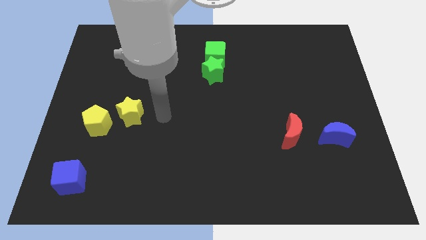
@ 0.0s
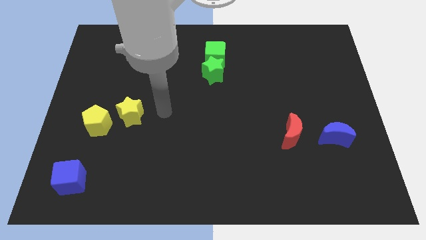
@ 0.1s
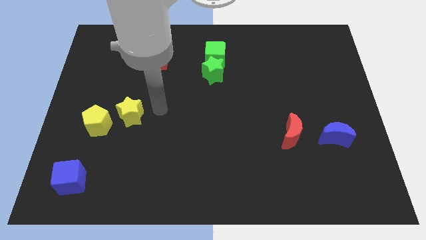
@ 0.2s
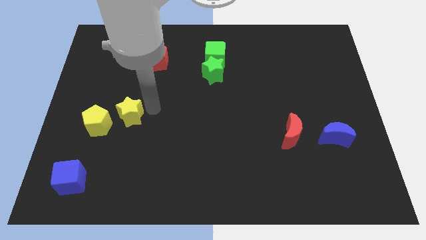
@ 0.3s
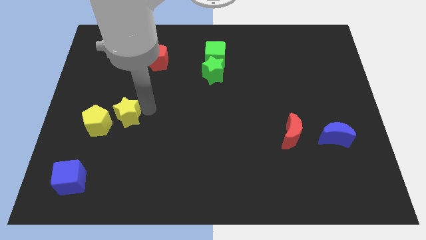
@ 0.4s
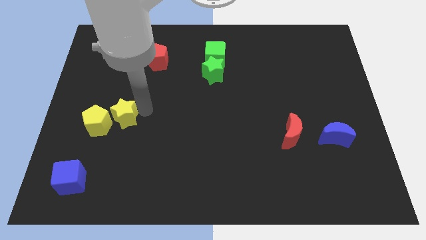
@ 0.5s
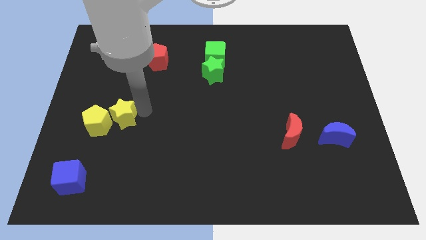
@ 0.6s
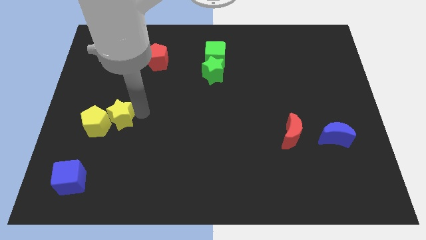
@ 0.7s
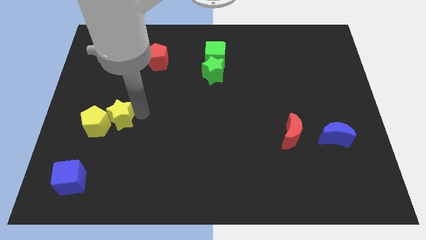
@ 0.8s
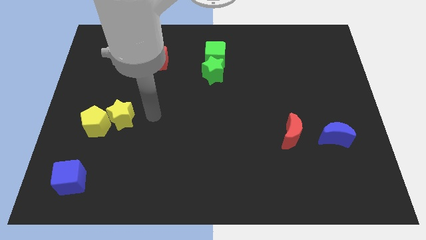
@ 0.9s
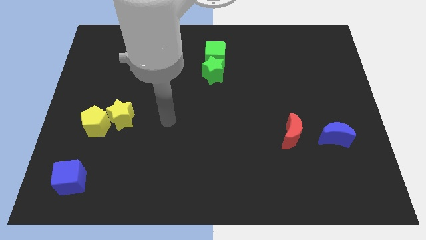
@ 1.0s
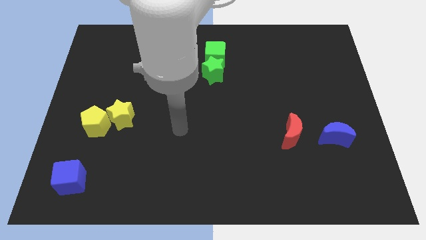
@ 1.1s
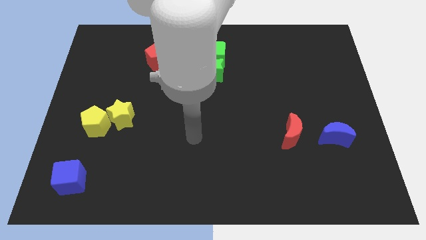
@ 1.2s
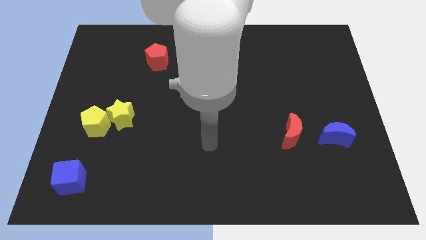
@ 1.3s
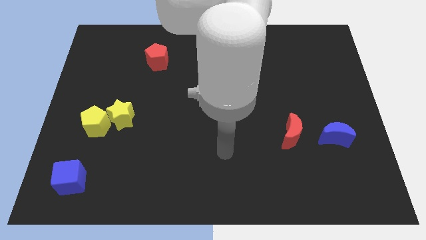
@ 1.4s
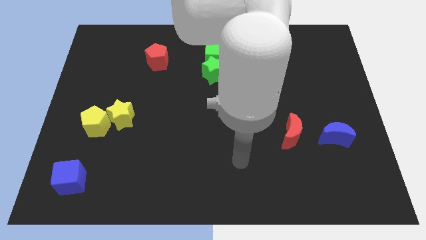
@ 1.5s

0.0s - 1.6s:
push the yellow star into the yellow pentagon

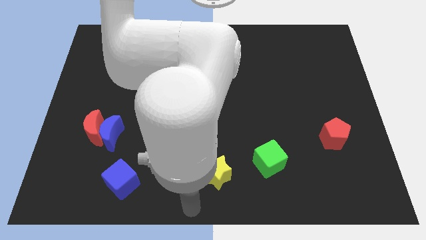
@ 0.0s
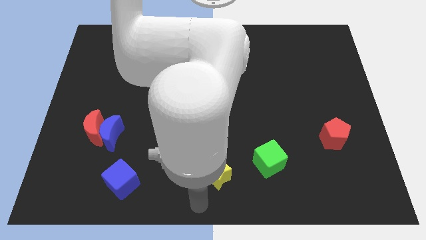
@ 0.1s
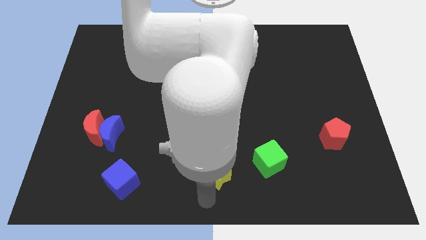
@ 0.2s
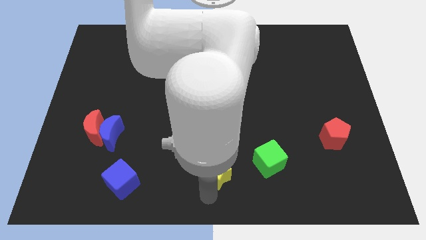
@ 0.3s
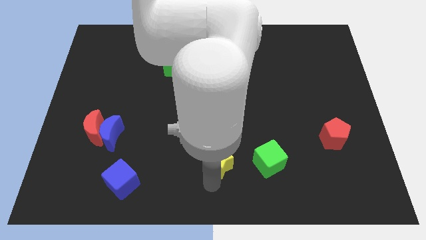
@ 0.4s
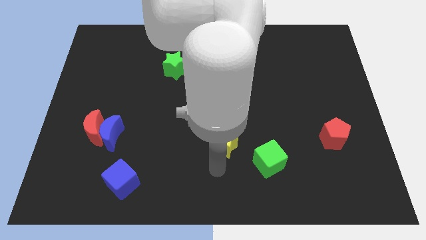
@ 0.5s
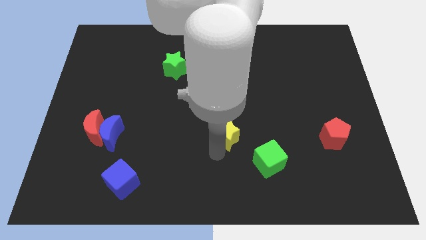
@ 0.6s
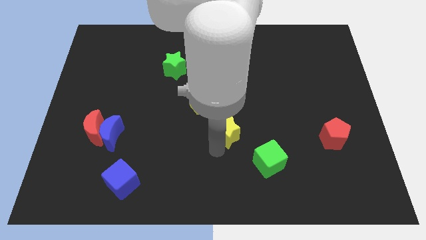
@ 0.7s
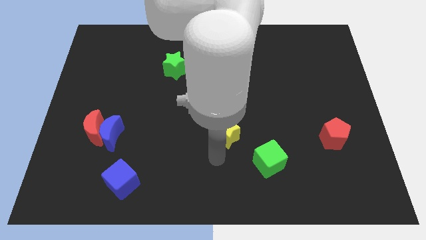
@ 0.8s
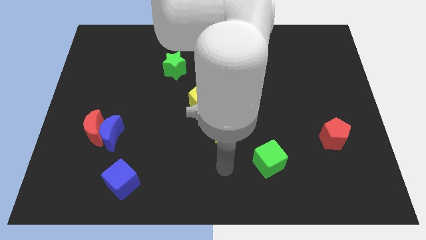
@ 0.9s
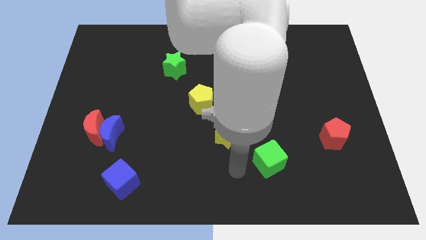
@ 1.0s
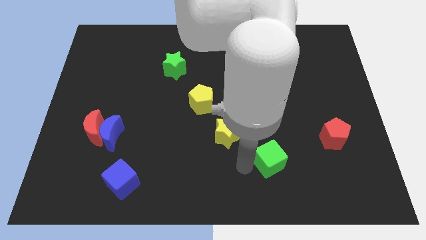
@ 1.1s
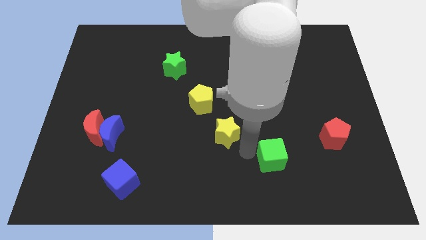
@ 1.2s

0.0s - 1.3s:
place the yellow star in between the green cube and yellow pentagon diagonally

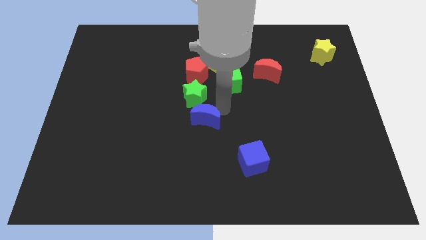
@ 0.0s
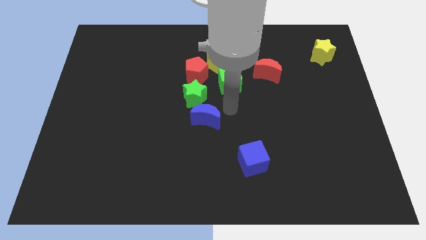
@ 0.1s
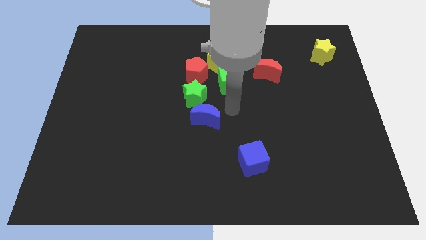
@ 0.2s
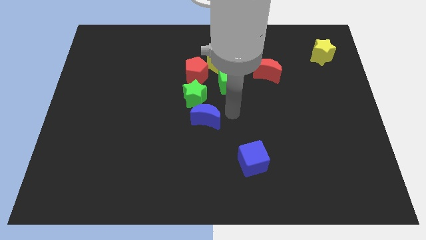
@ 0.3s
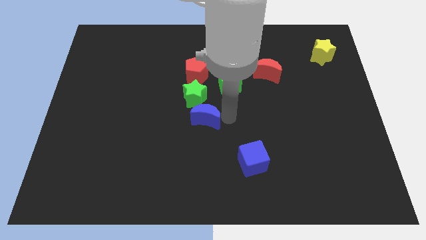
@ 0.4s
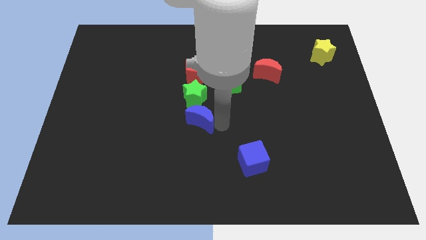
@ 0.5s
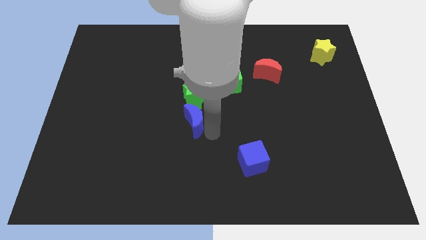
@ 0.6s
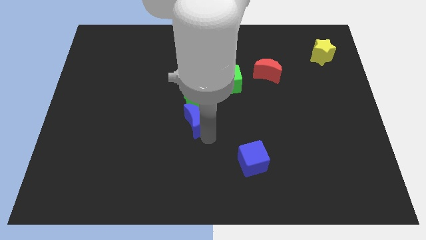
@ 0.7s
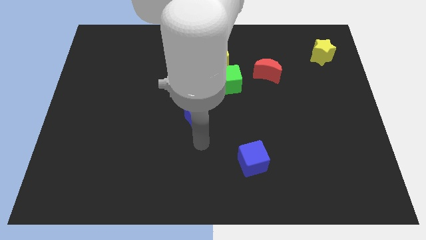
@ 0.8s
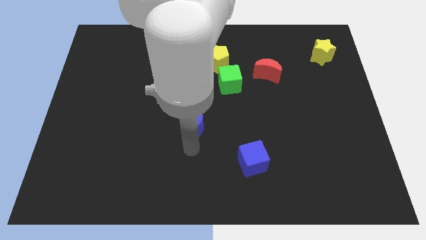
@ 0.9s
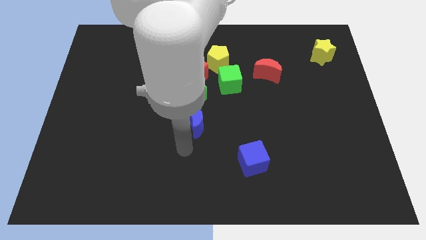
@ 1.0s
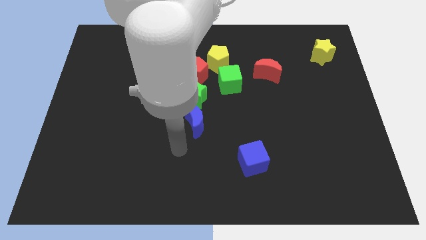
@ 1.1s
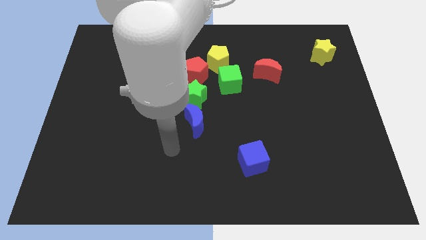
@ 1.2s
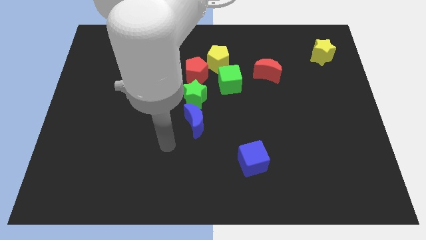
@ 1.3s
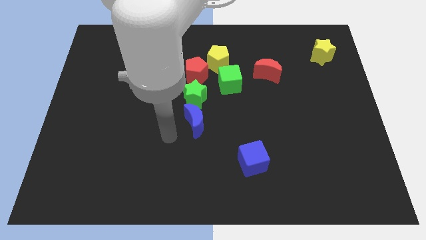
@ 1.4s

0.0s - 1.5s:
adjust the blue moon at the bottom of the green star

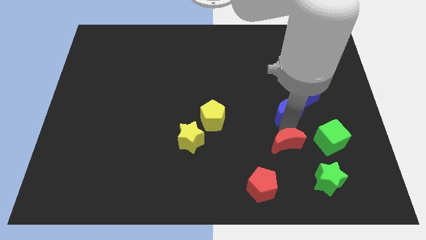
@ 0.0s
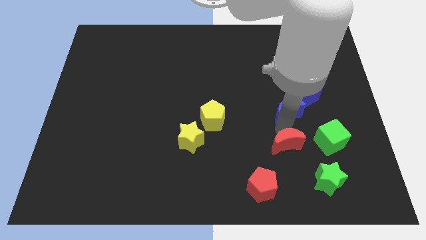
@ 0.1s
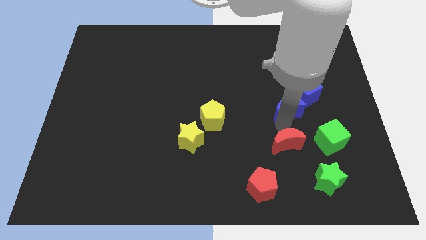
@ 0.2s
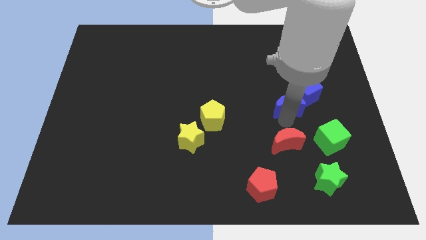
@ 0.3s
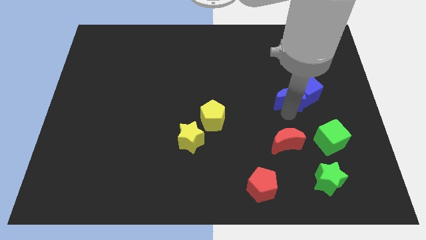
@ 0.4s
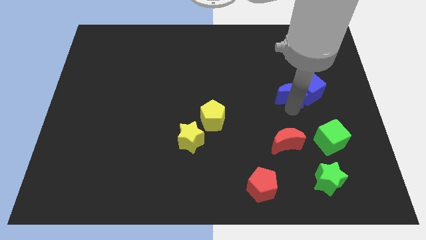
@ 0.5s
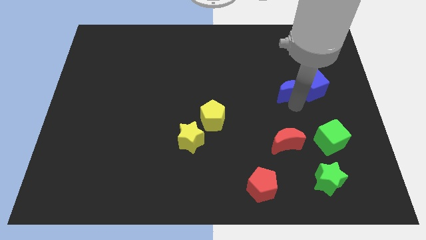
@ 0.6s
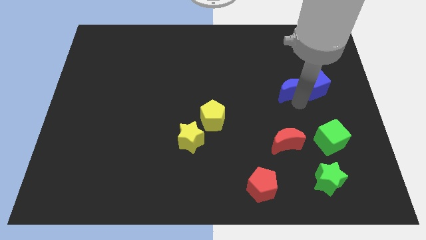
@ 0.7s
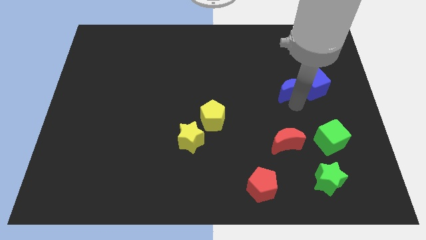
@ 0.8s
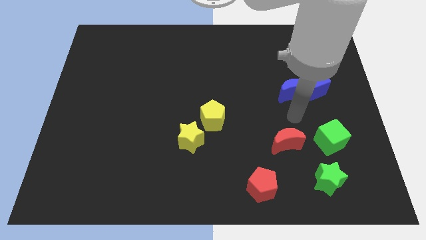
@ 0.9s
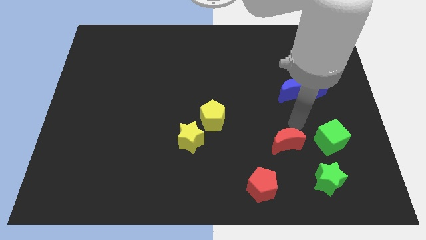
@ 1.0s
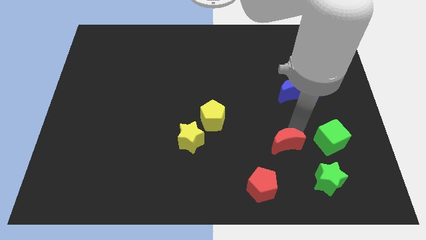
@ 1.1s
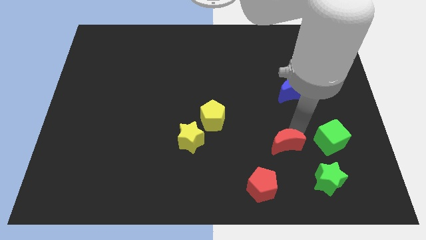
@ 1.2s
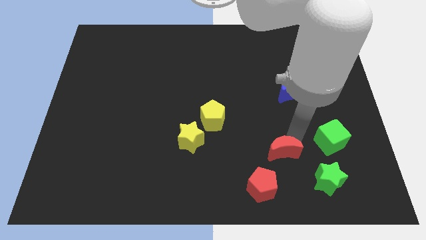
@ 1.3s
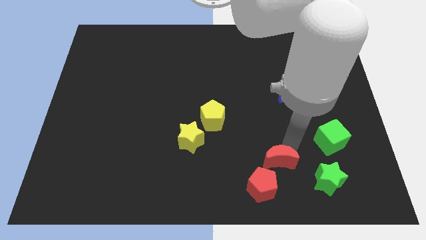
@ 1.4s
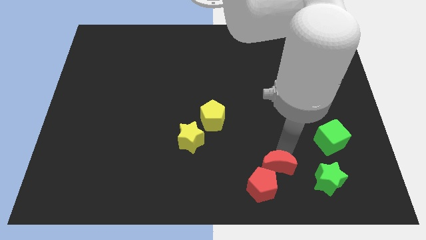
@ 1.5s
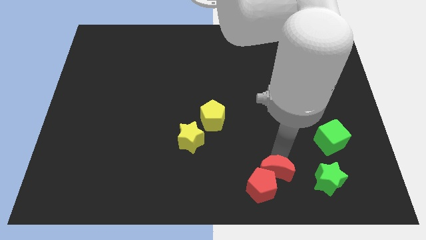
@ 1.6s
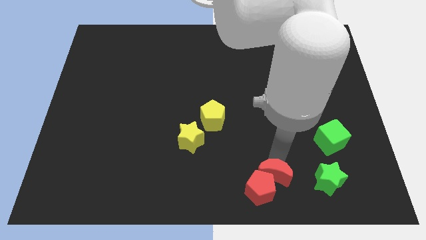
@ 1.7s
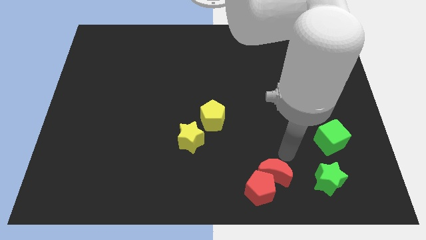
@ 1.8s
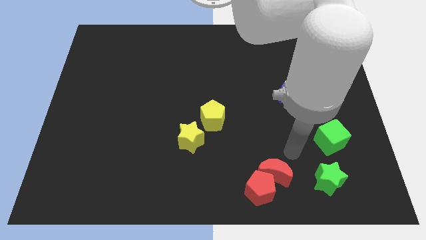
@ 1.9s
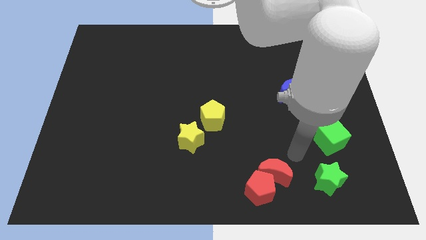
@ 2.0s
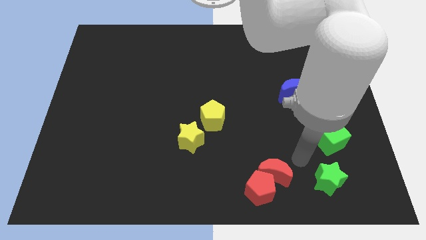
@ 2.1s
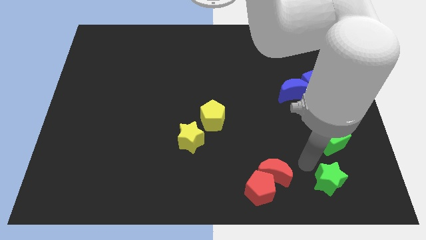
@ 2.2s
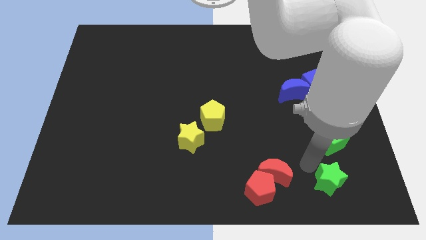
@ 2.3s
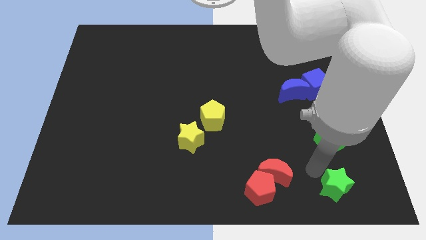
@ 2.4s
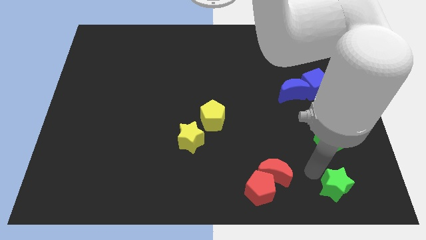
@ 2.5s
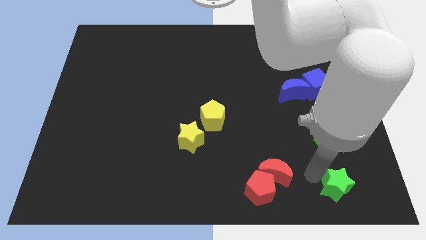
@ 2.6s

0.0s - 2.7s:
form a pair of blue blocks and red blocks separately

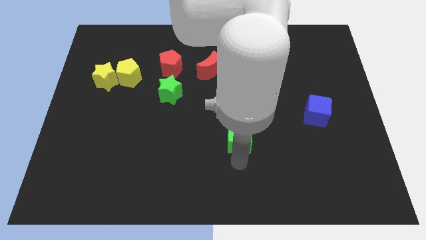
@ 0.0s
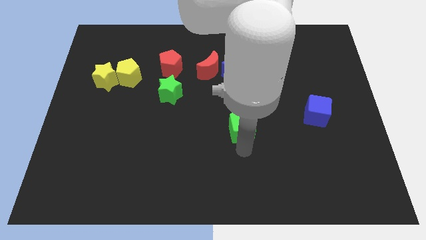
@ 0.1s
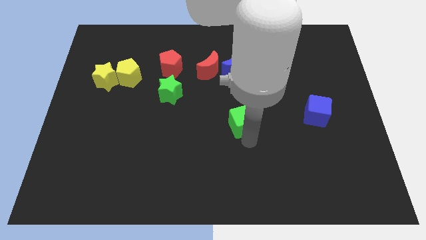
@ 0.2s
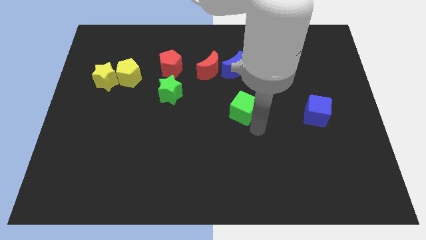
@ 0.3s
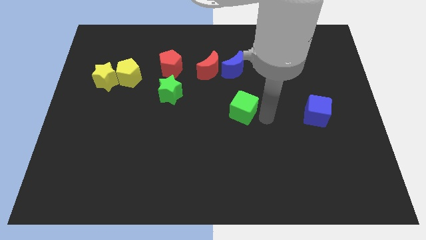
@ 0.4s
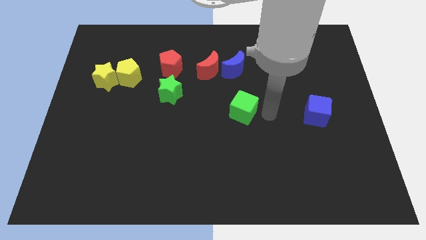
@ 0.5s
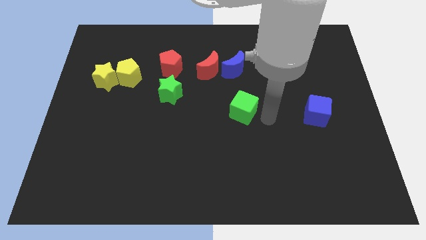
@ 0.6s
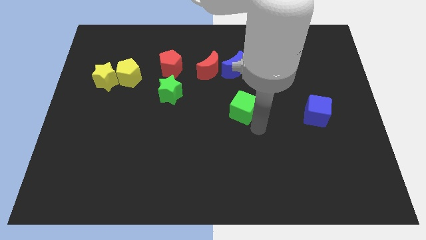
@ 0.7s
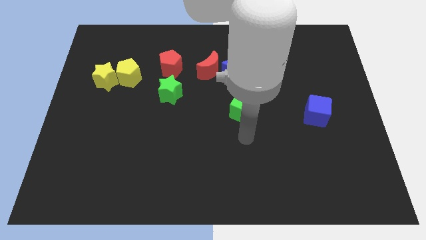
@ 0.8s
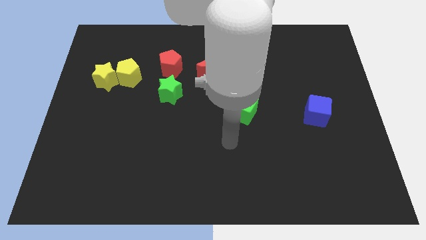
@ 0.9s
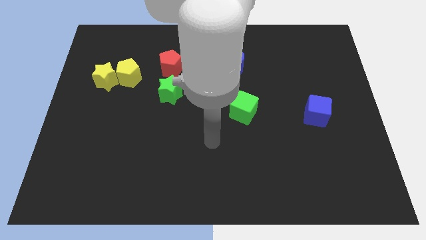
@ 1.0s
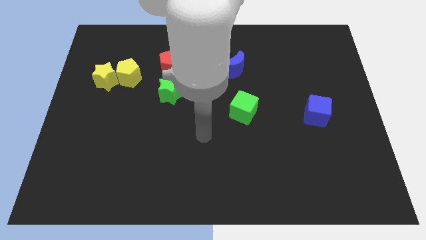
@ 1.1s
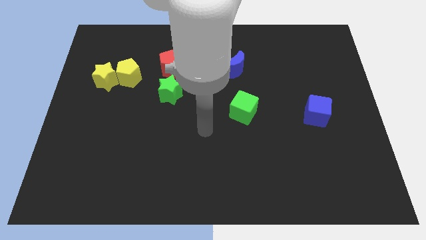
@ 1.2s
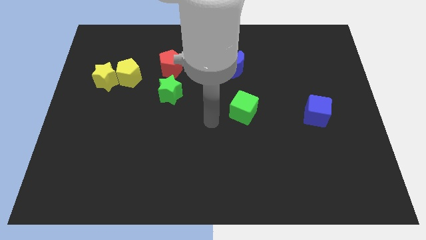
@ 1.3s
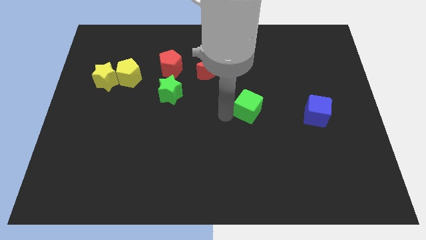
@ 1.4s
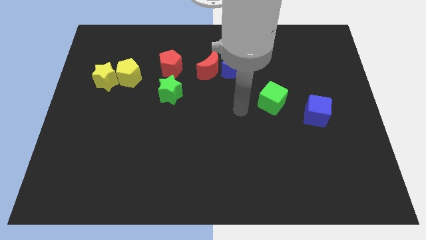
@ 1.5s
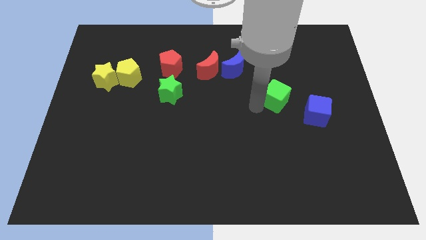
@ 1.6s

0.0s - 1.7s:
move the green cube towards the left side of the blue cube

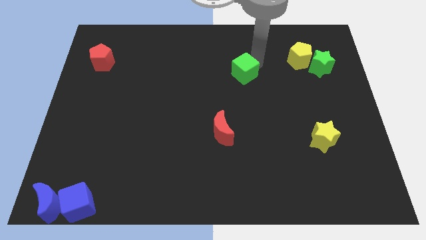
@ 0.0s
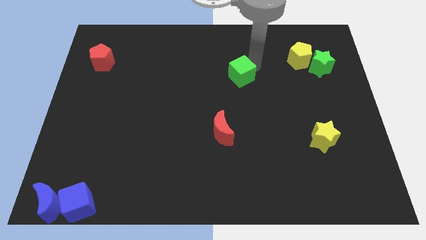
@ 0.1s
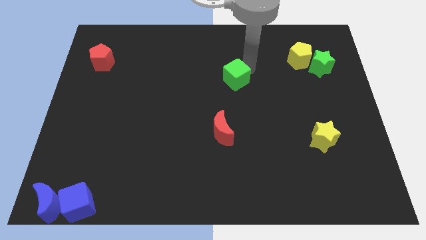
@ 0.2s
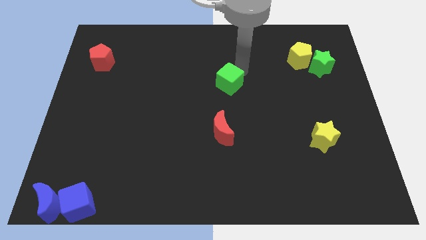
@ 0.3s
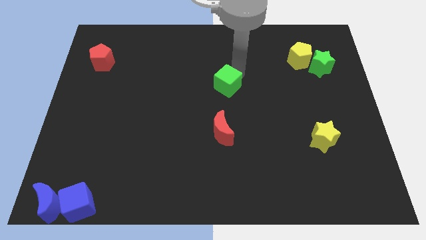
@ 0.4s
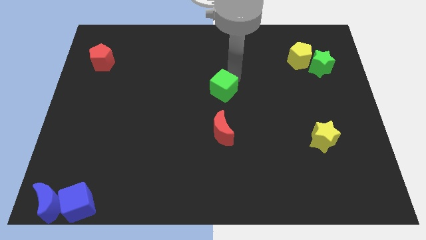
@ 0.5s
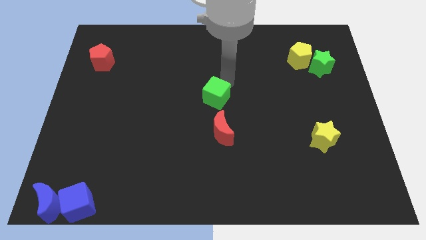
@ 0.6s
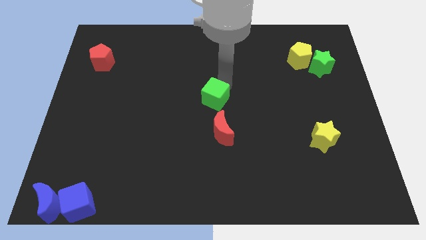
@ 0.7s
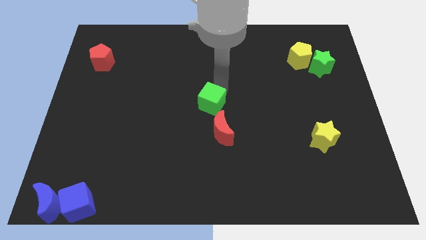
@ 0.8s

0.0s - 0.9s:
place green cube to the top of red moon
